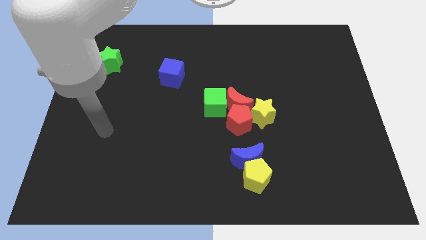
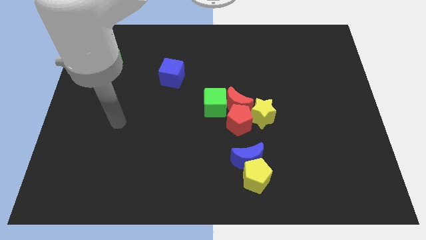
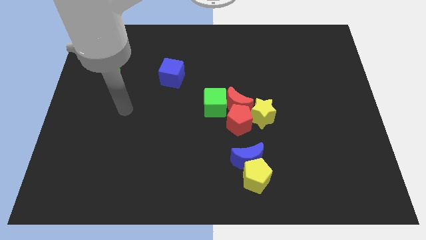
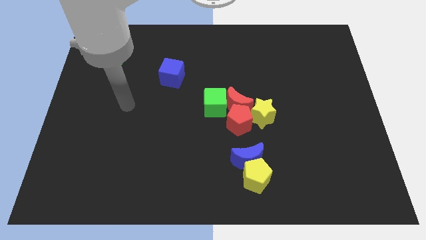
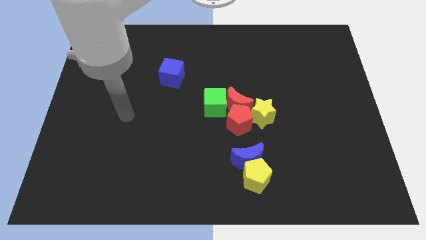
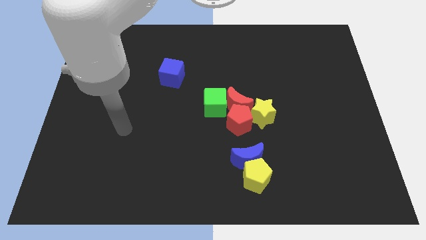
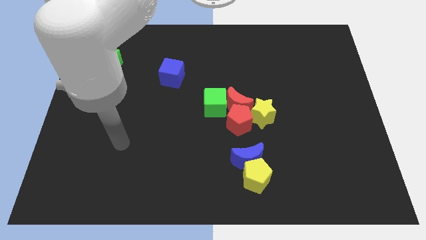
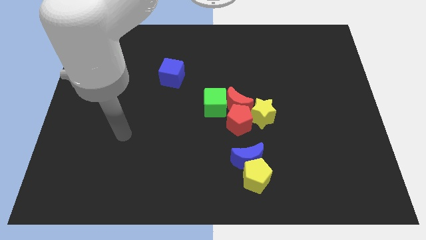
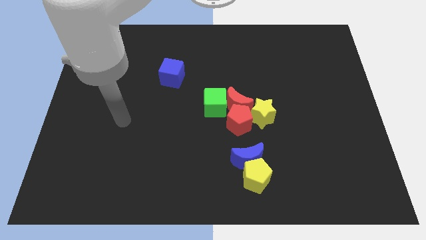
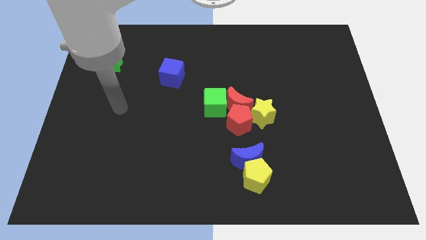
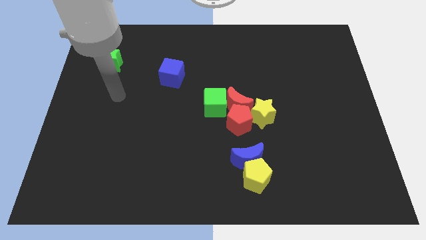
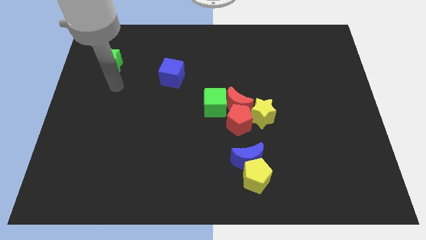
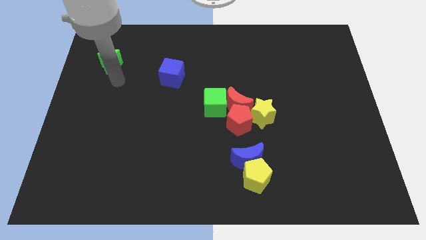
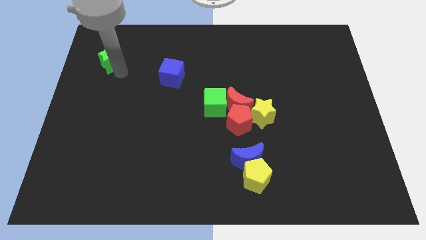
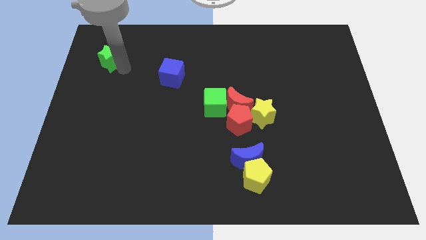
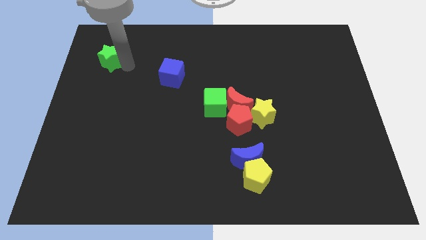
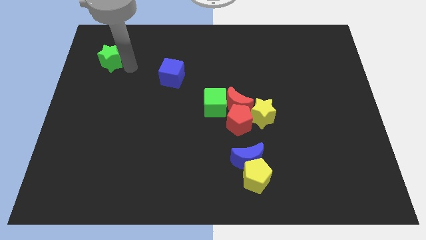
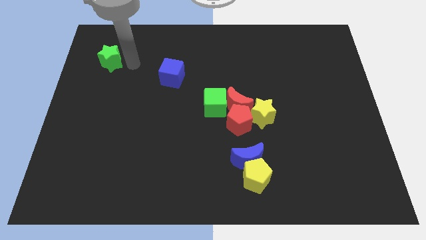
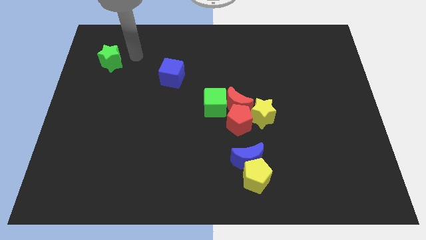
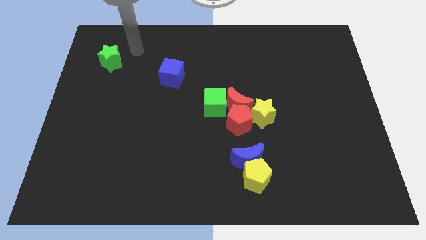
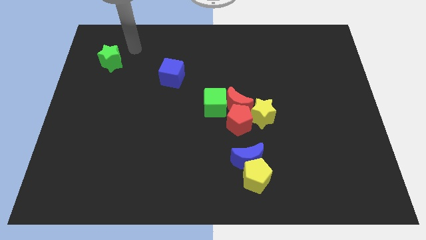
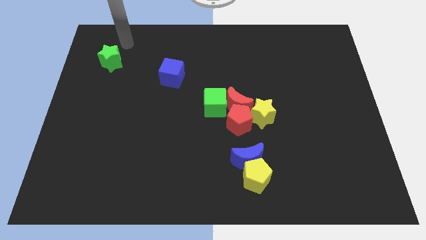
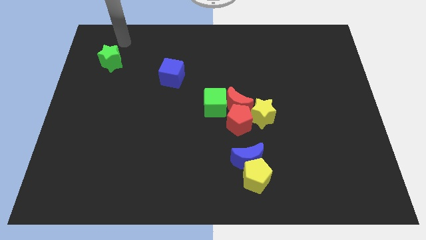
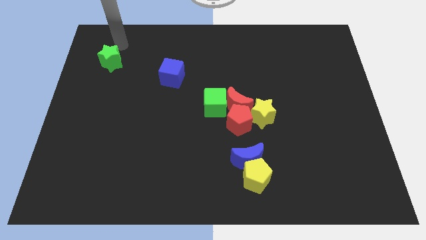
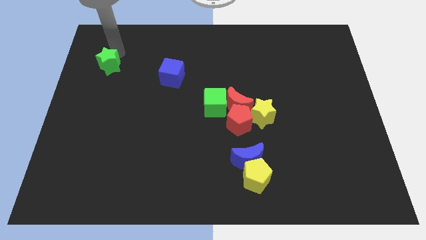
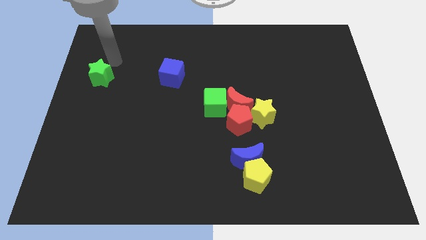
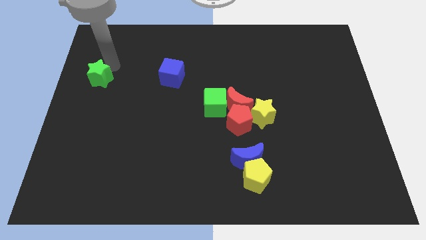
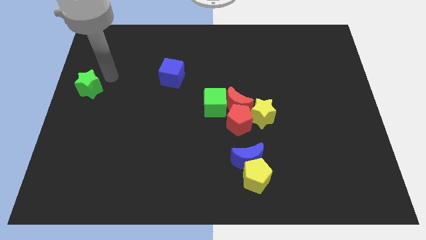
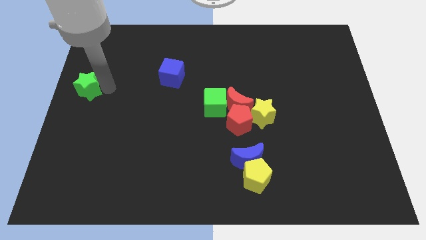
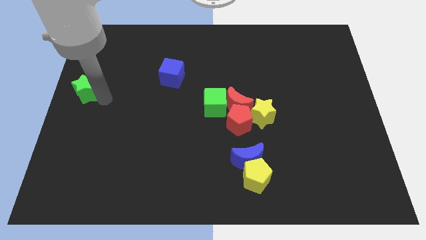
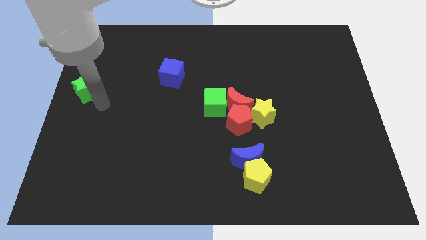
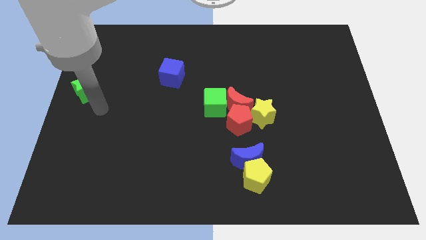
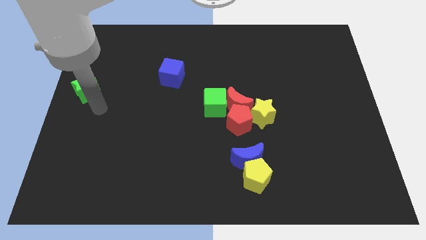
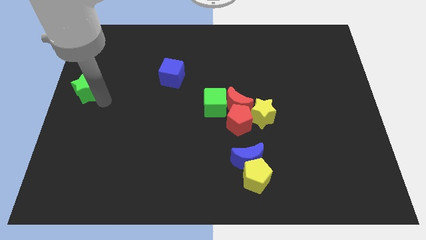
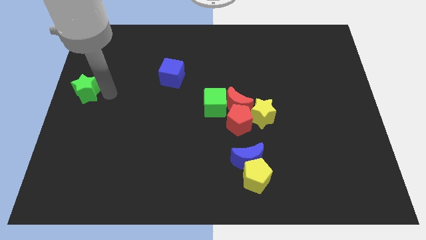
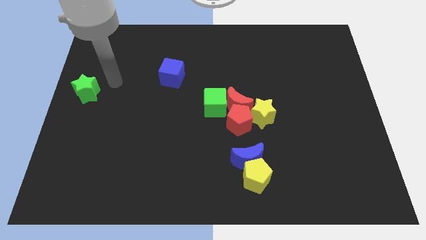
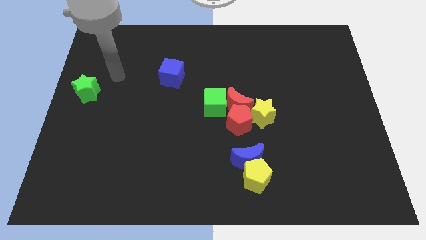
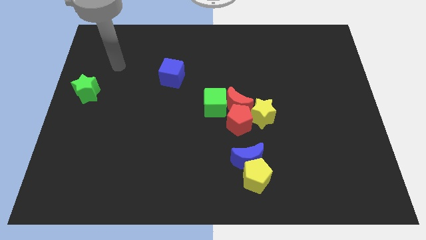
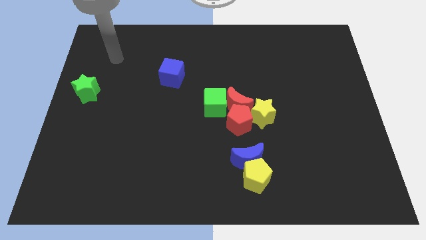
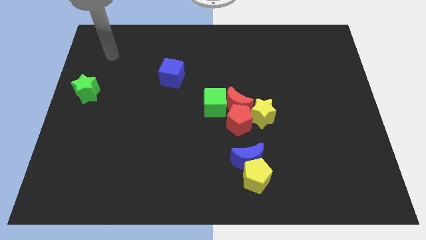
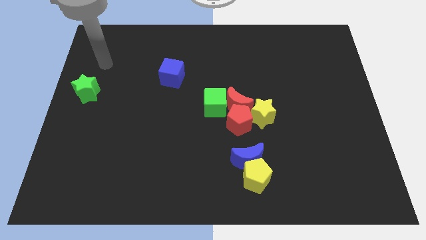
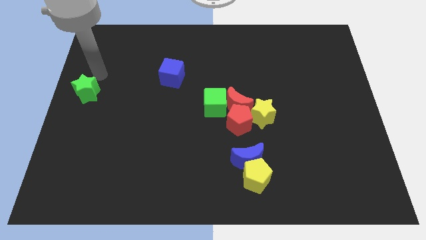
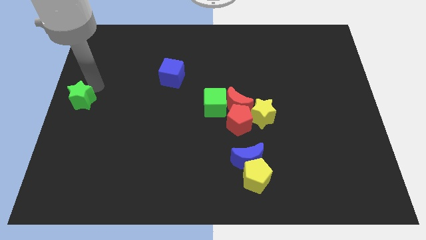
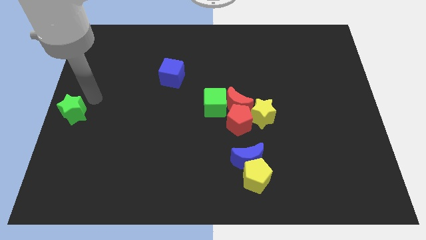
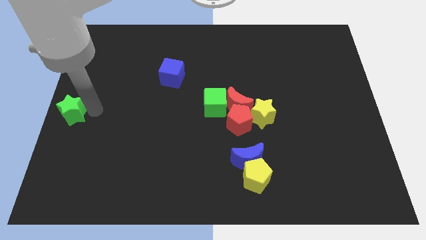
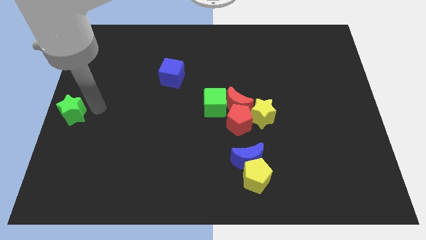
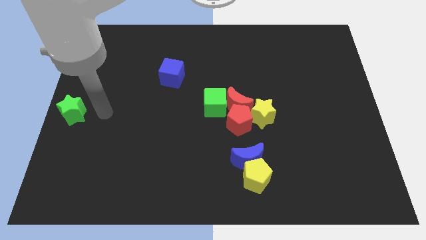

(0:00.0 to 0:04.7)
put the green star at the center left side of the board

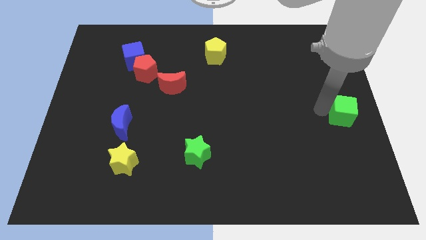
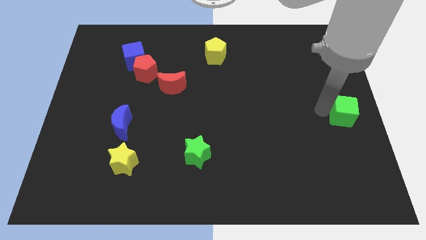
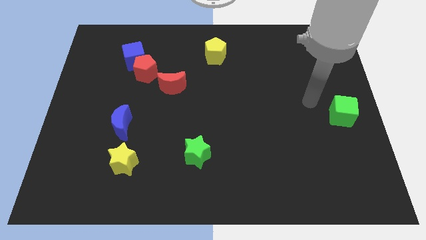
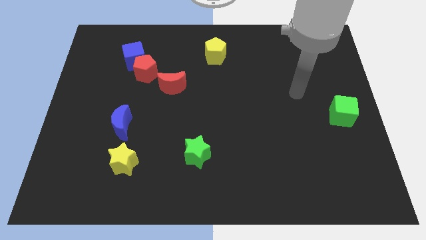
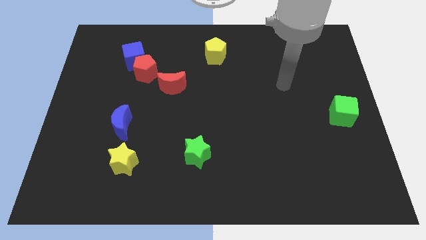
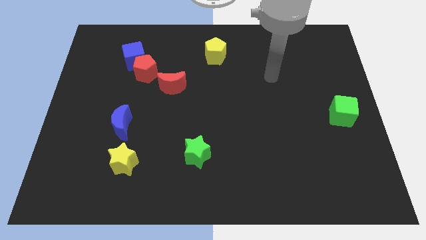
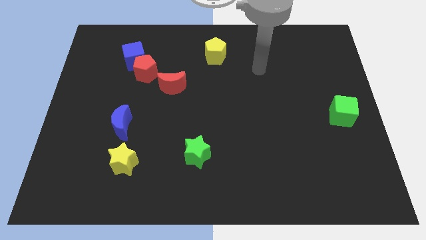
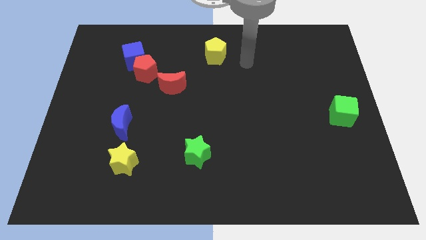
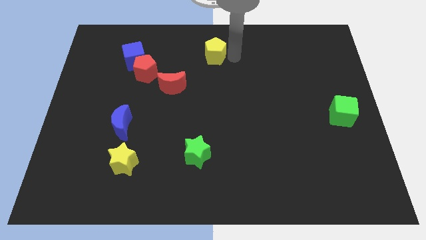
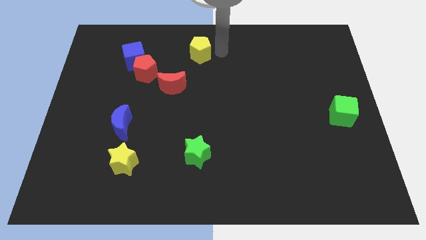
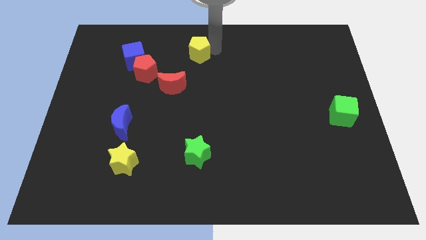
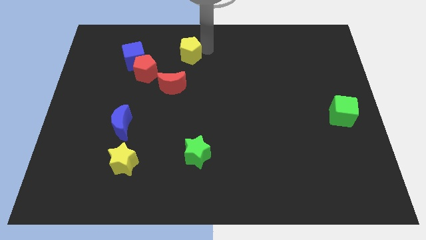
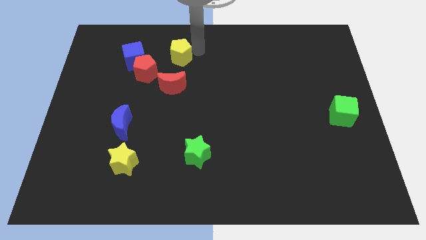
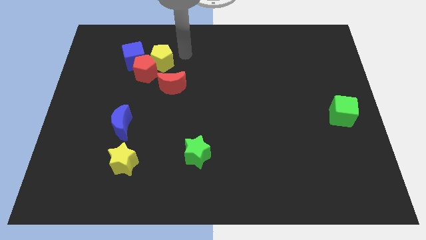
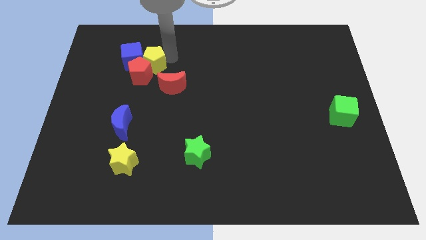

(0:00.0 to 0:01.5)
move the yellow pentagon above the red pentagon

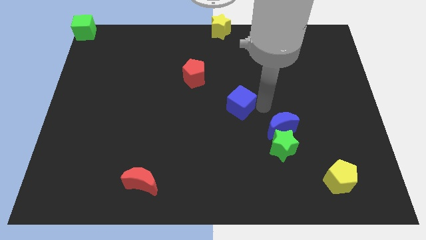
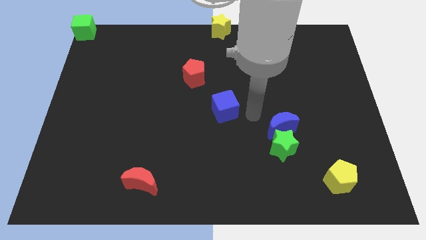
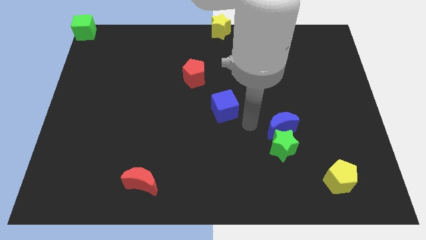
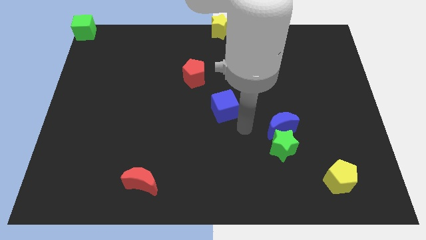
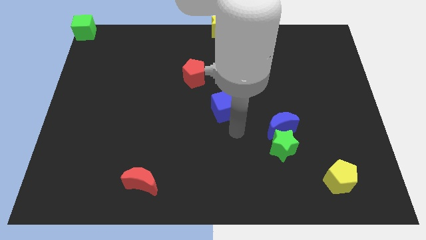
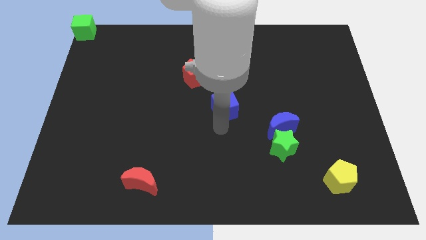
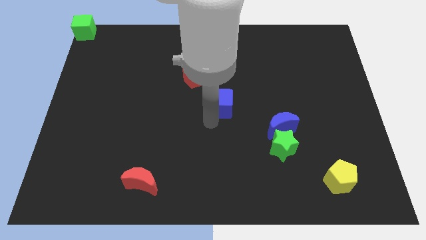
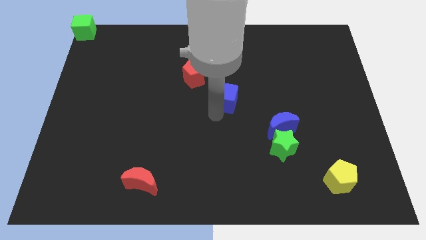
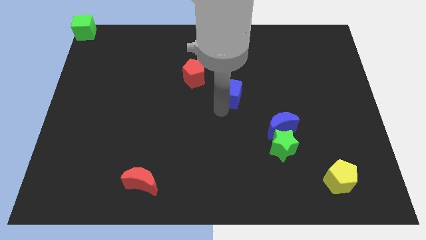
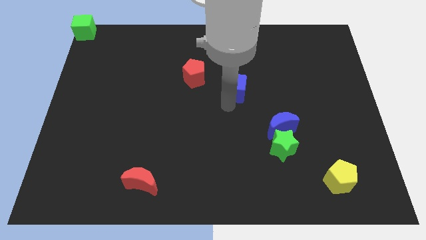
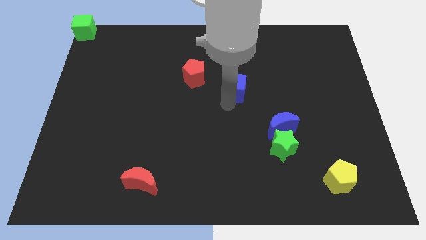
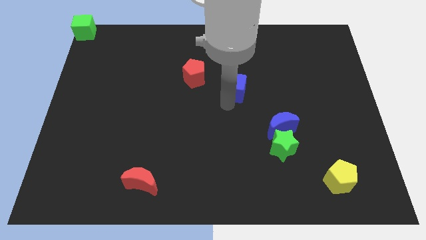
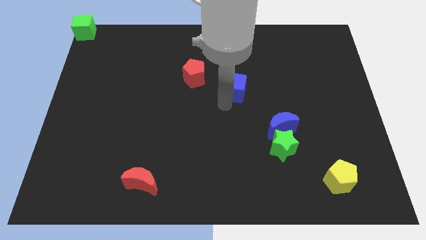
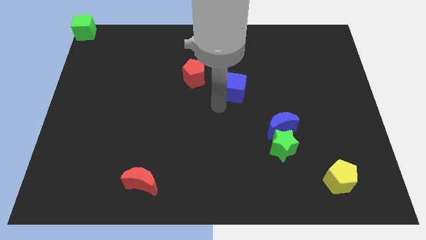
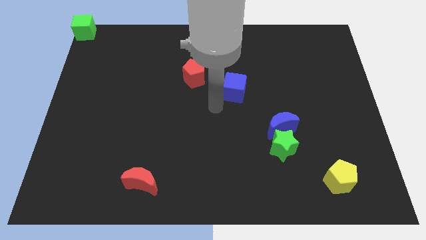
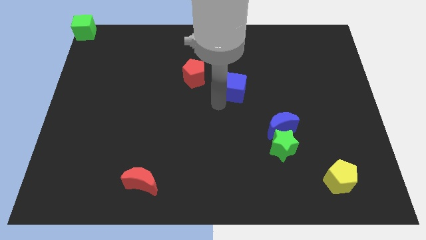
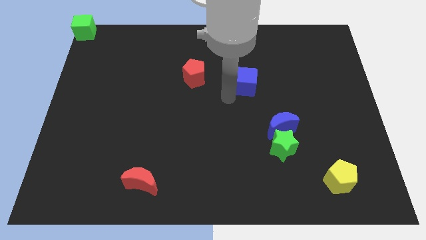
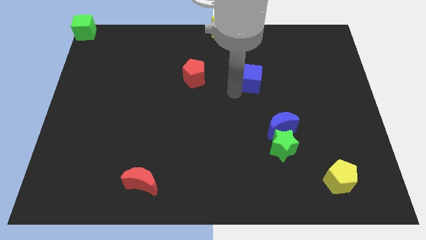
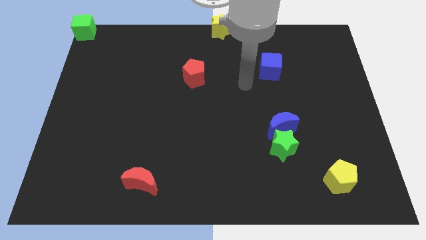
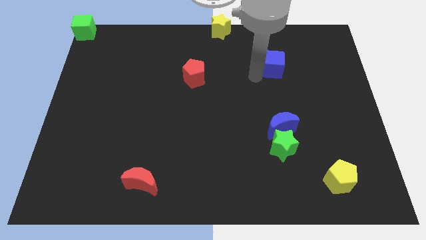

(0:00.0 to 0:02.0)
put the blue cube above the blue crescent

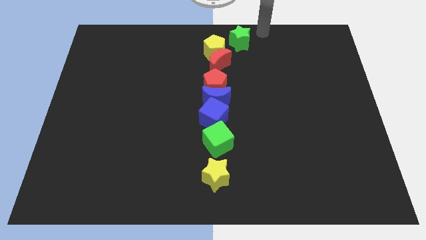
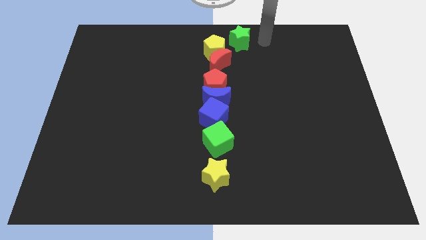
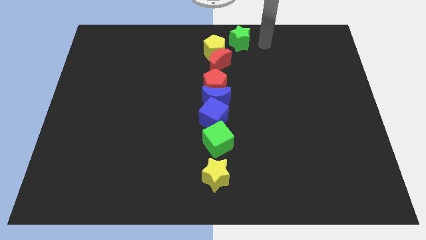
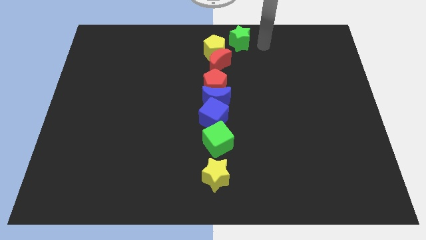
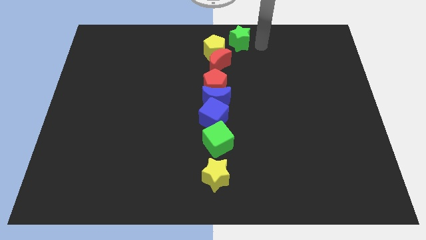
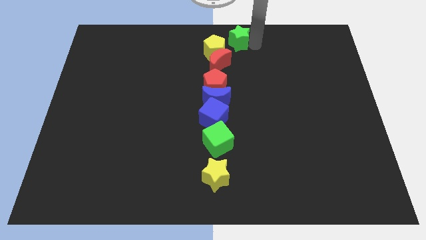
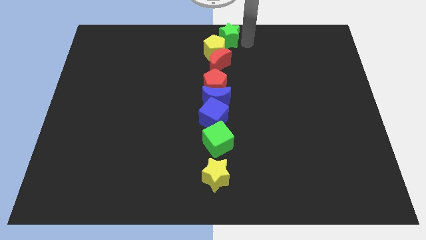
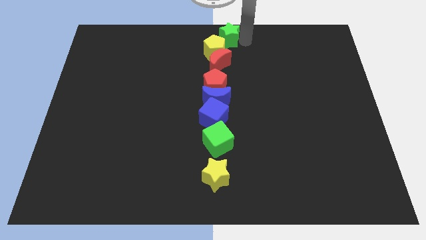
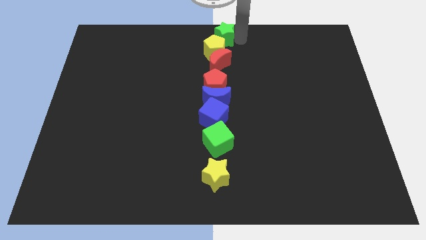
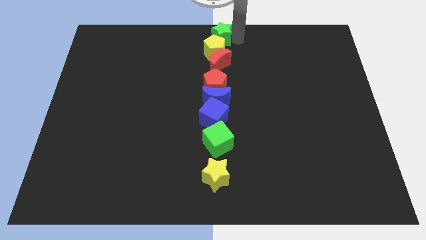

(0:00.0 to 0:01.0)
place green star on top center of the board
